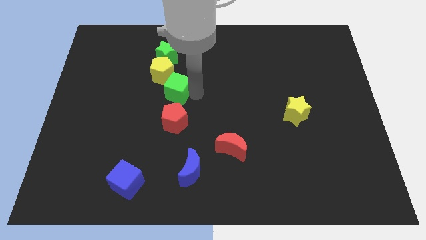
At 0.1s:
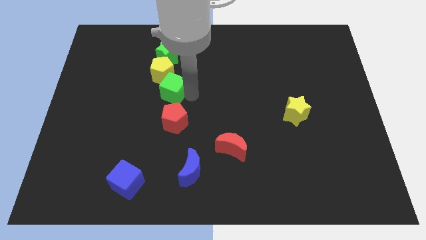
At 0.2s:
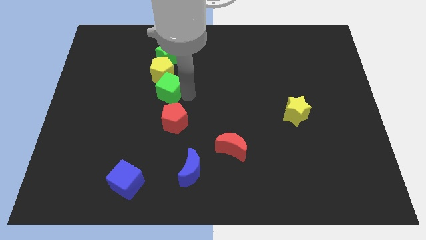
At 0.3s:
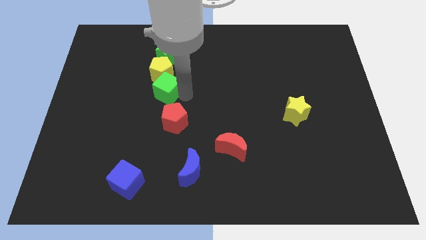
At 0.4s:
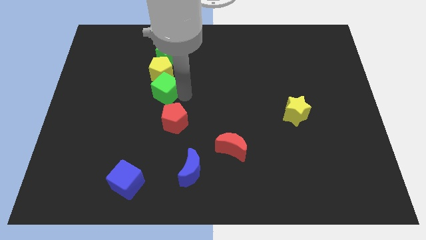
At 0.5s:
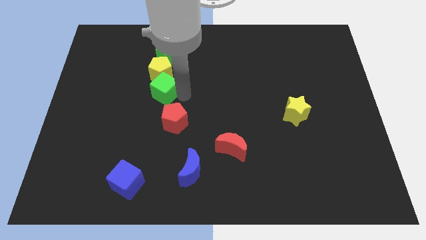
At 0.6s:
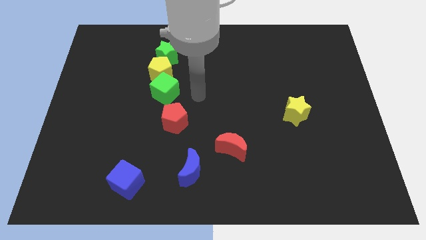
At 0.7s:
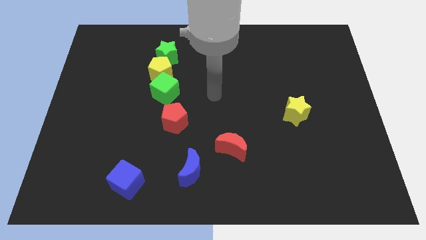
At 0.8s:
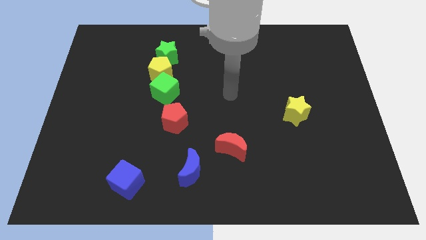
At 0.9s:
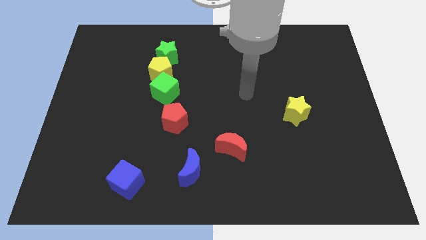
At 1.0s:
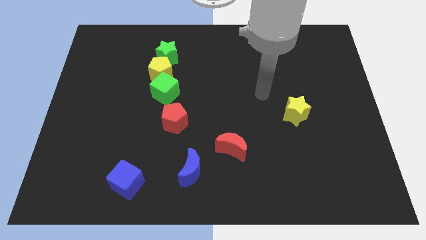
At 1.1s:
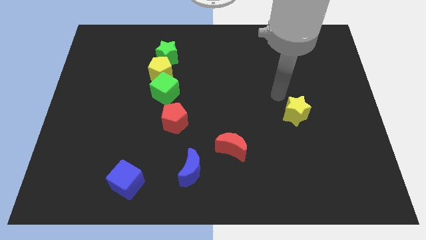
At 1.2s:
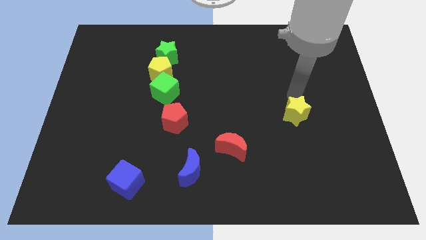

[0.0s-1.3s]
adjust the green cube vertically below the yellow pentagon

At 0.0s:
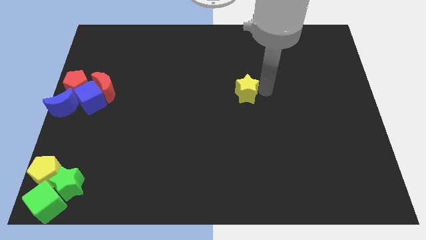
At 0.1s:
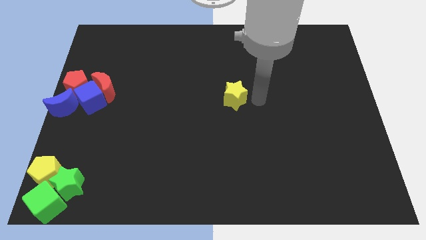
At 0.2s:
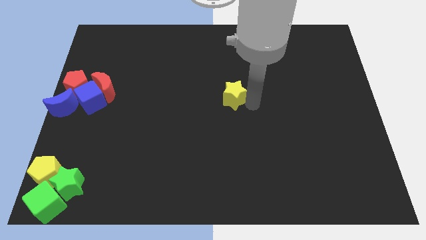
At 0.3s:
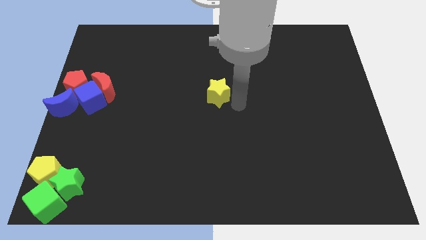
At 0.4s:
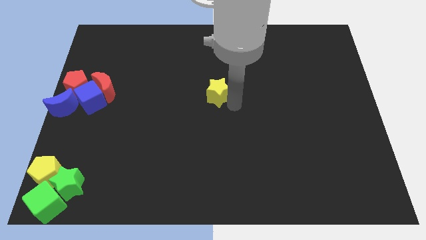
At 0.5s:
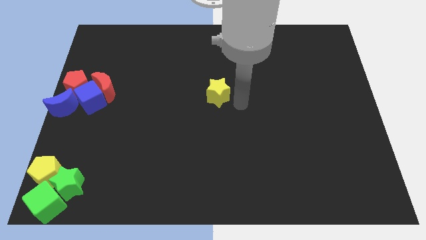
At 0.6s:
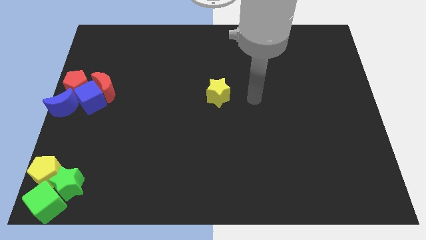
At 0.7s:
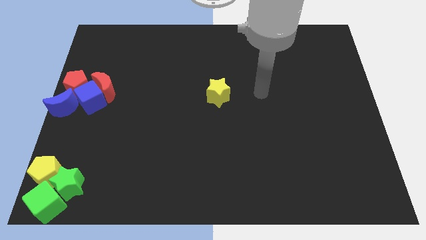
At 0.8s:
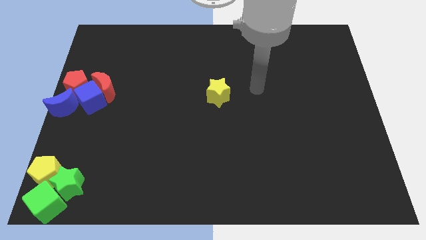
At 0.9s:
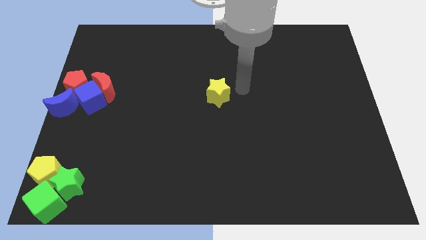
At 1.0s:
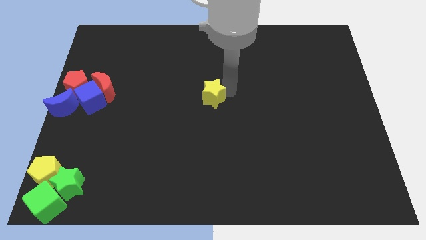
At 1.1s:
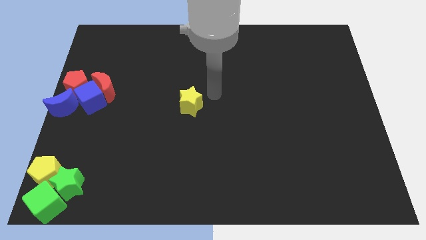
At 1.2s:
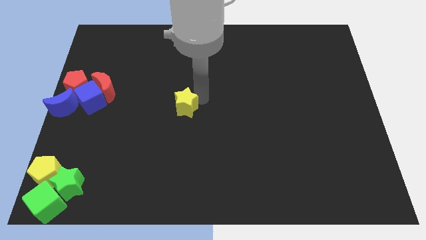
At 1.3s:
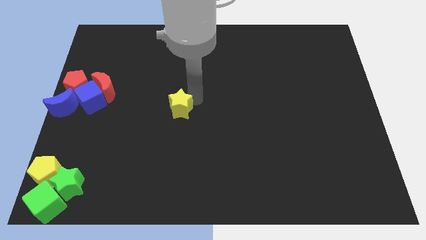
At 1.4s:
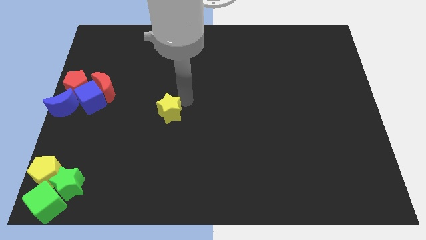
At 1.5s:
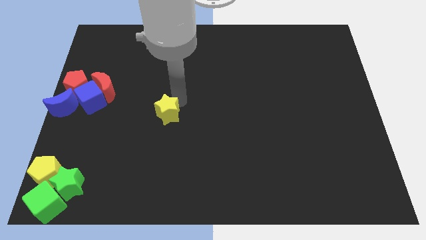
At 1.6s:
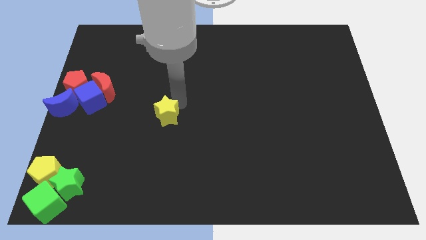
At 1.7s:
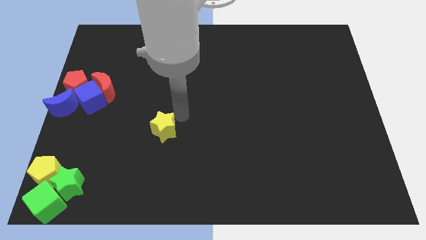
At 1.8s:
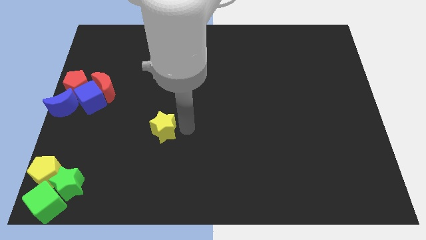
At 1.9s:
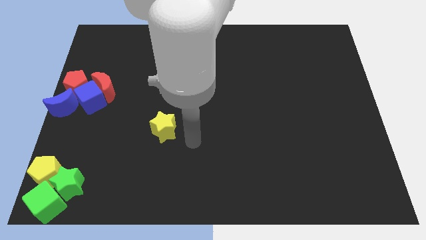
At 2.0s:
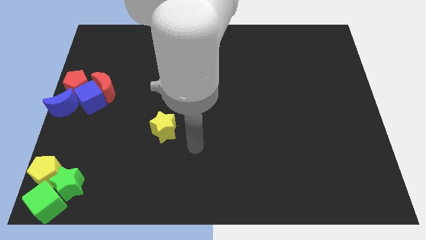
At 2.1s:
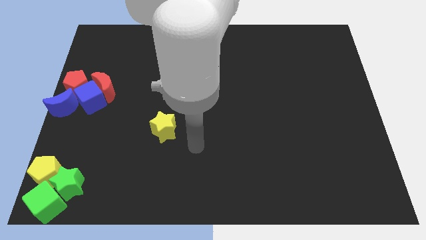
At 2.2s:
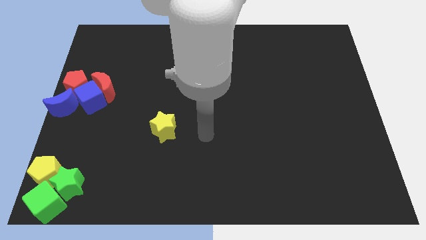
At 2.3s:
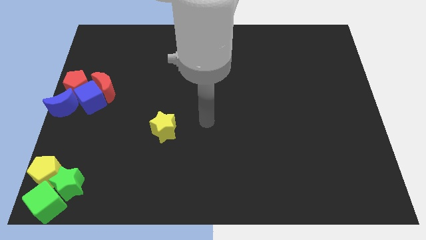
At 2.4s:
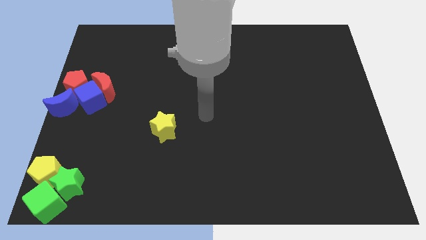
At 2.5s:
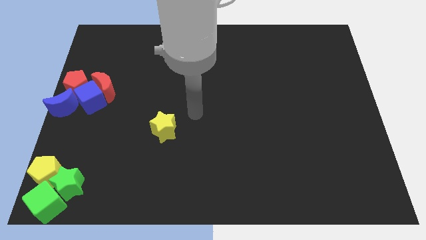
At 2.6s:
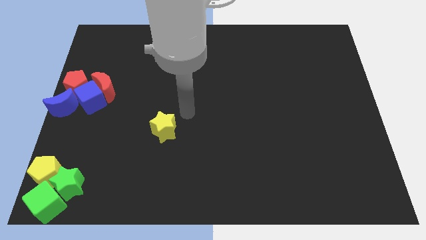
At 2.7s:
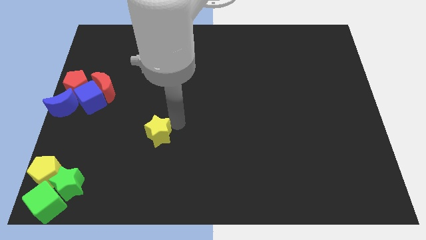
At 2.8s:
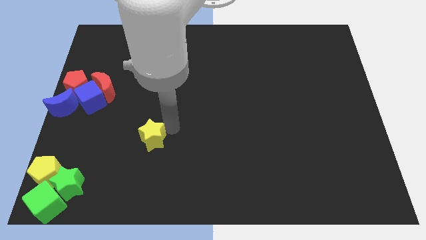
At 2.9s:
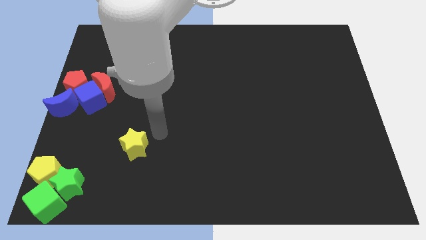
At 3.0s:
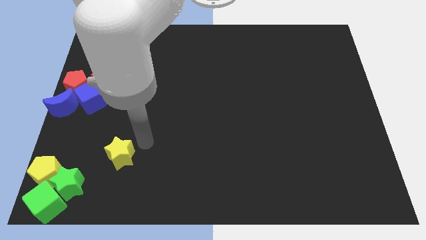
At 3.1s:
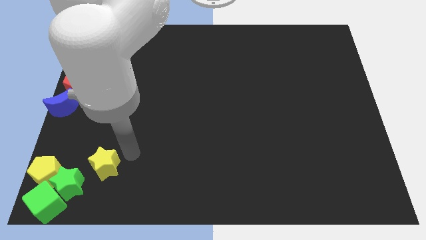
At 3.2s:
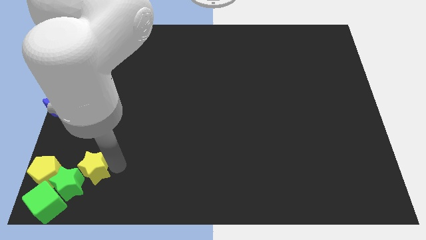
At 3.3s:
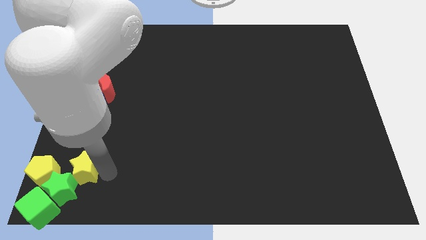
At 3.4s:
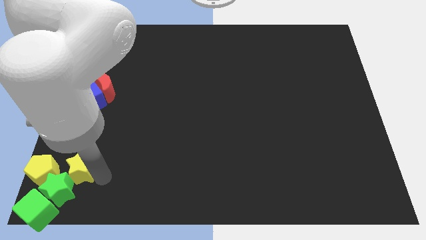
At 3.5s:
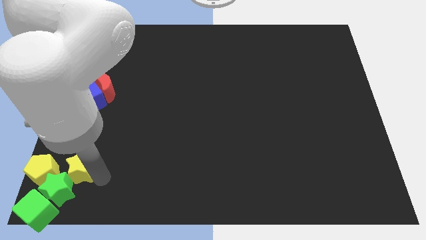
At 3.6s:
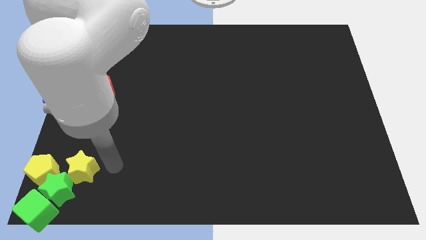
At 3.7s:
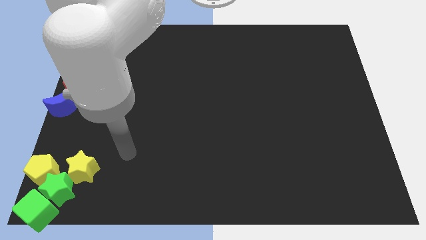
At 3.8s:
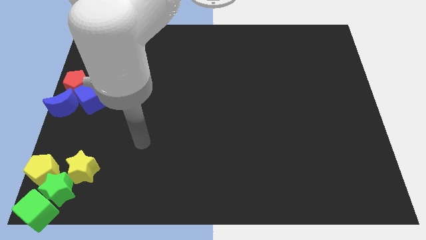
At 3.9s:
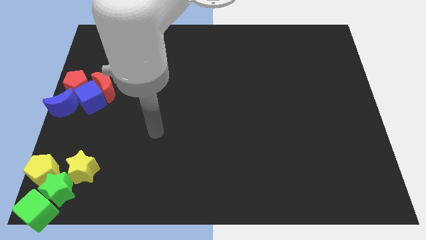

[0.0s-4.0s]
put the yellow star into the green star

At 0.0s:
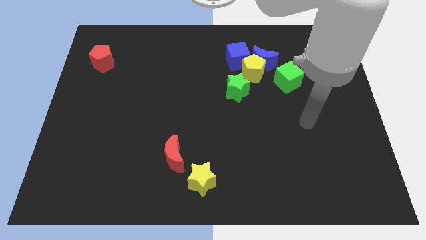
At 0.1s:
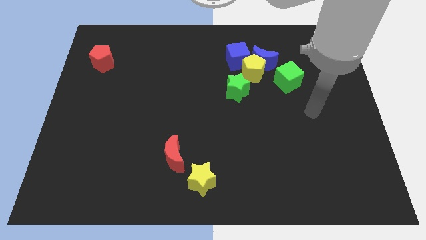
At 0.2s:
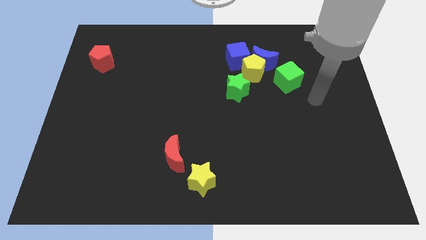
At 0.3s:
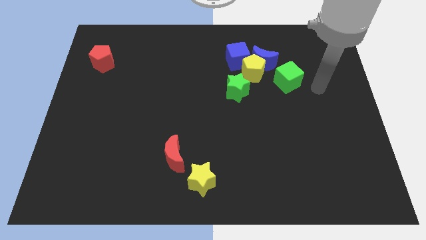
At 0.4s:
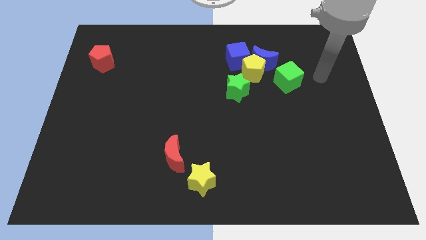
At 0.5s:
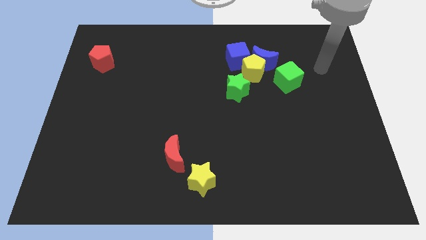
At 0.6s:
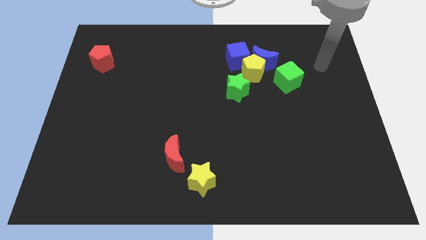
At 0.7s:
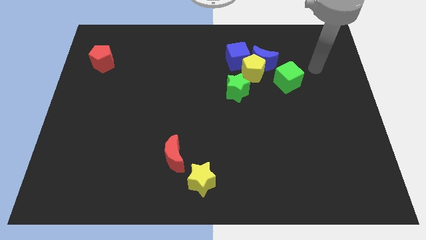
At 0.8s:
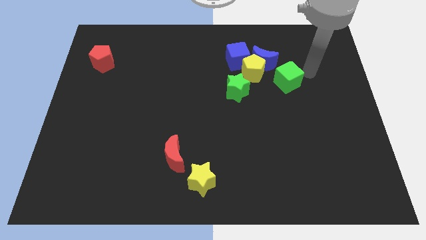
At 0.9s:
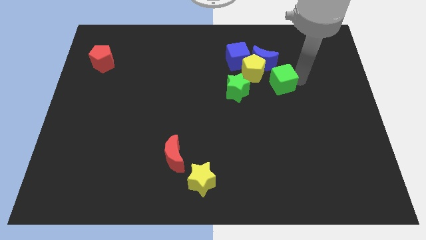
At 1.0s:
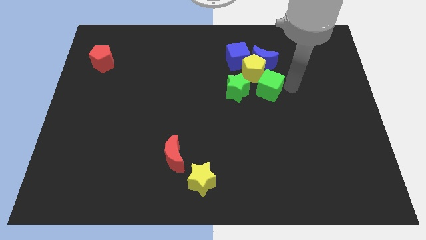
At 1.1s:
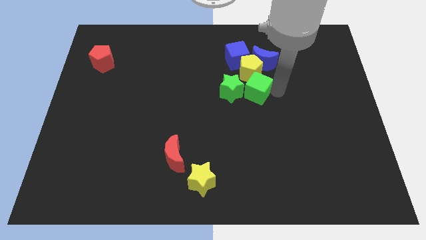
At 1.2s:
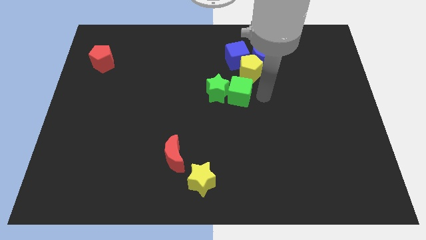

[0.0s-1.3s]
push the green cube to the bottom of the yellow pentagon

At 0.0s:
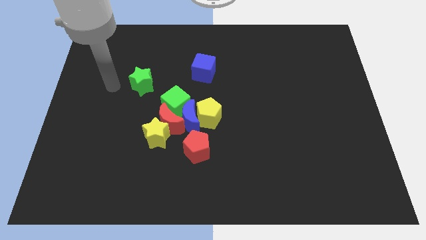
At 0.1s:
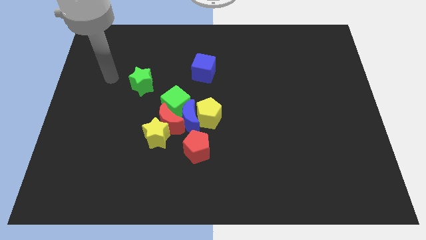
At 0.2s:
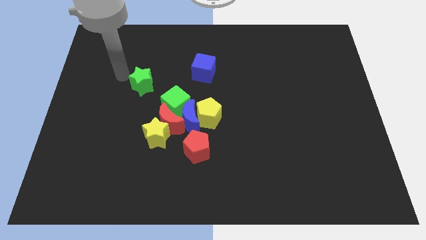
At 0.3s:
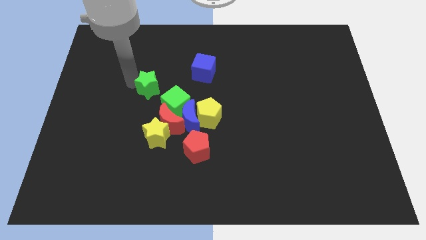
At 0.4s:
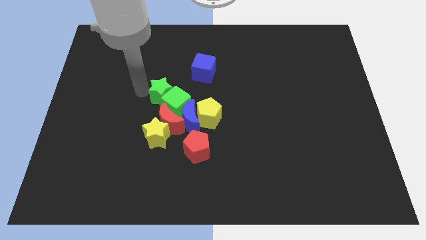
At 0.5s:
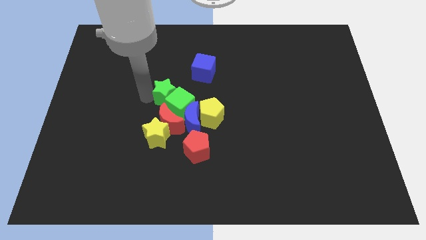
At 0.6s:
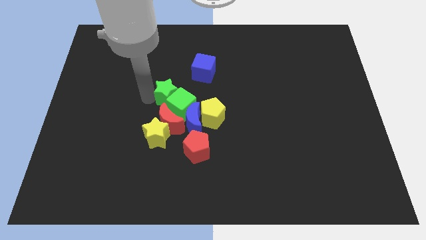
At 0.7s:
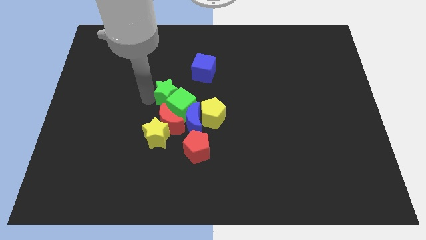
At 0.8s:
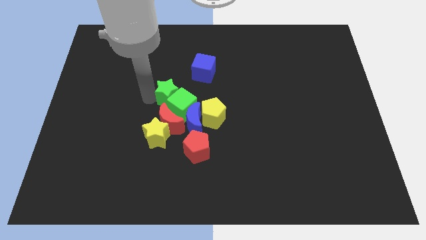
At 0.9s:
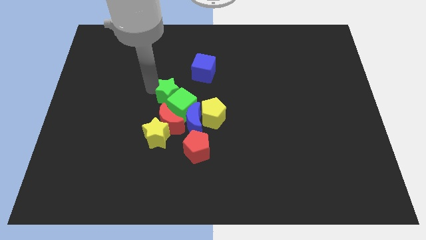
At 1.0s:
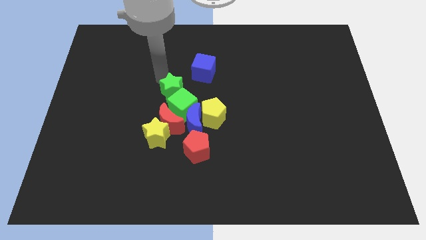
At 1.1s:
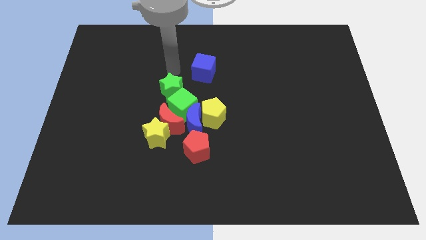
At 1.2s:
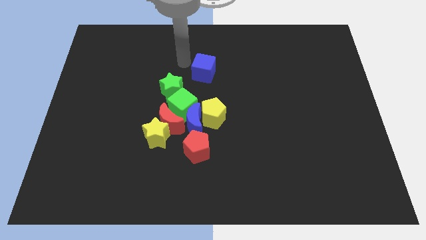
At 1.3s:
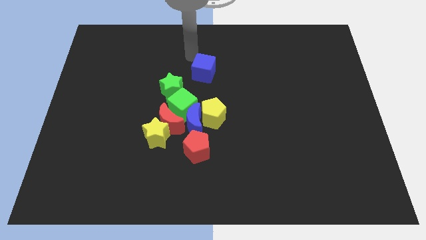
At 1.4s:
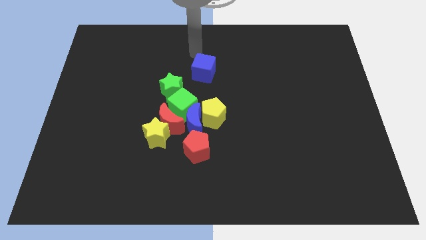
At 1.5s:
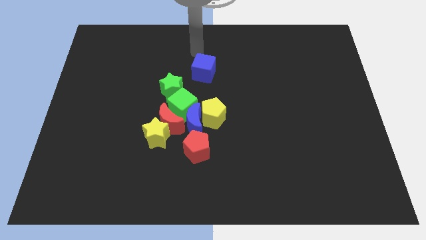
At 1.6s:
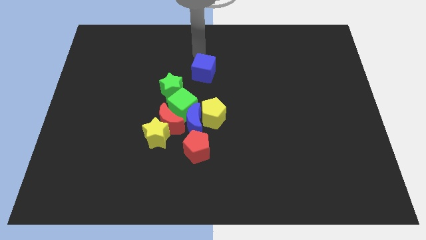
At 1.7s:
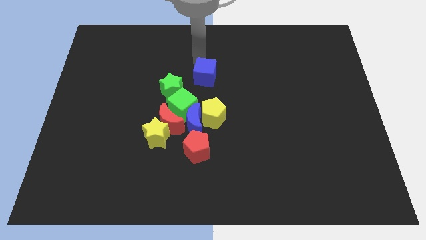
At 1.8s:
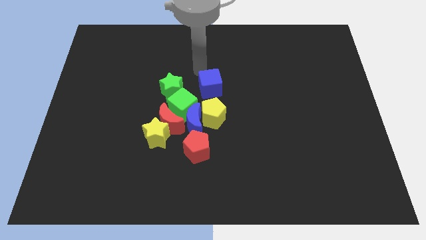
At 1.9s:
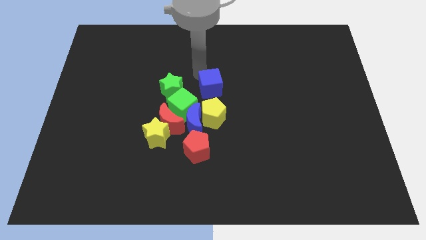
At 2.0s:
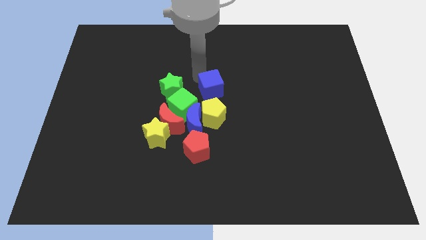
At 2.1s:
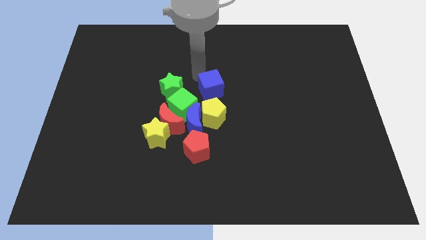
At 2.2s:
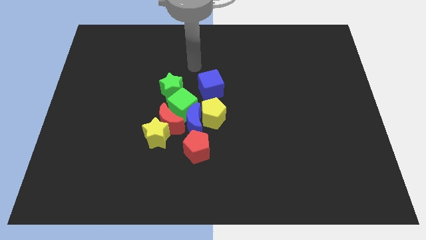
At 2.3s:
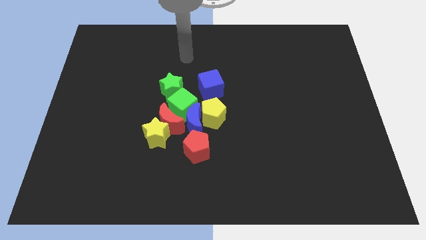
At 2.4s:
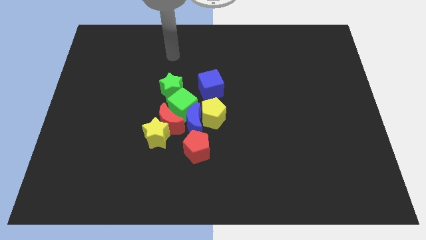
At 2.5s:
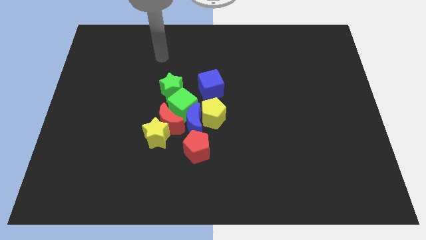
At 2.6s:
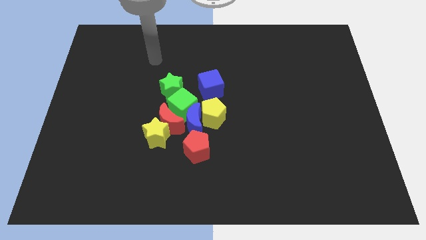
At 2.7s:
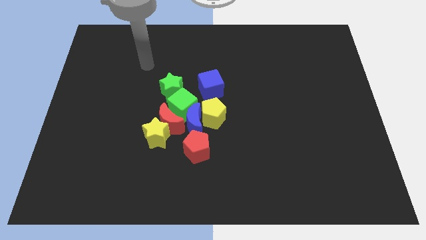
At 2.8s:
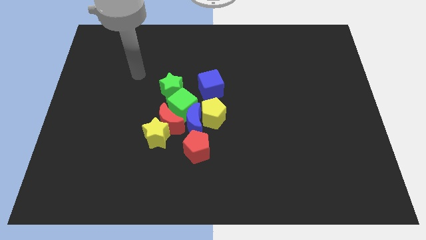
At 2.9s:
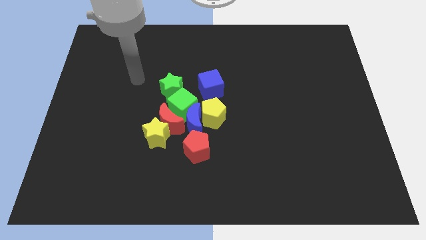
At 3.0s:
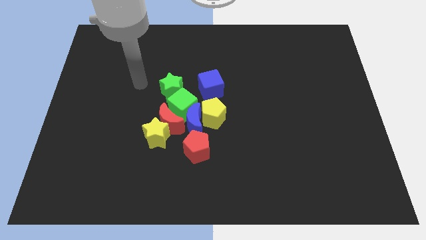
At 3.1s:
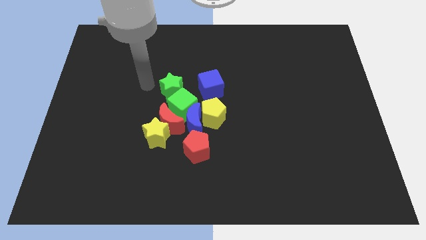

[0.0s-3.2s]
slightly move down the blue cube
